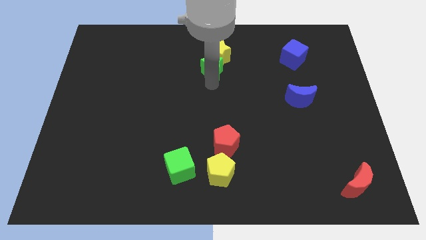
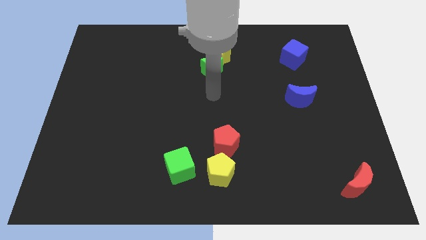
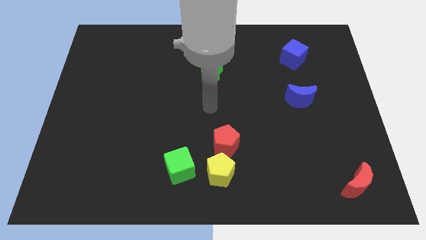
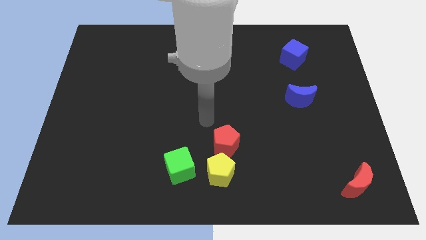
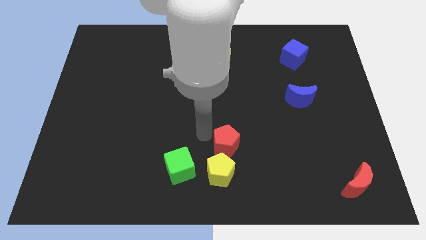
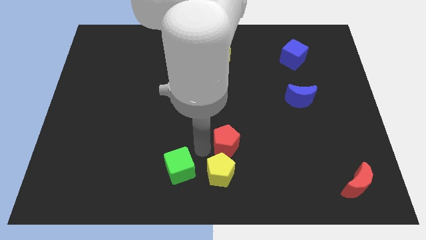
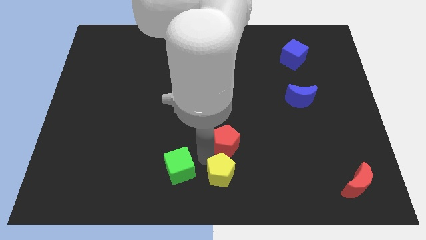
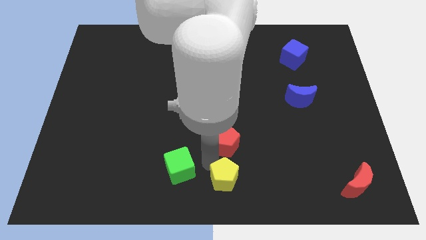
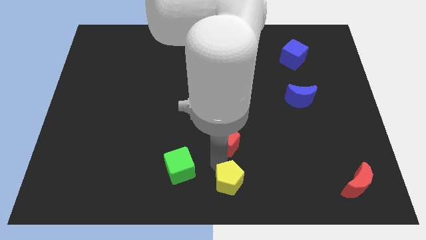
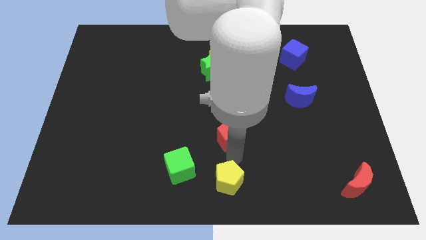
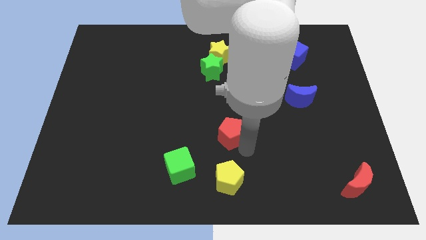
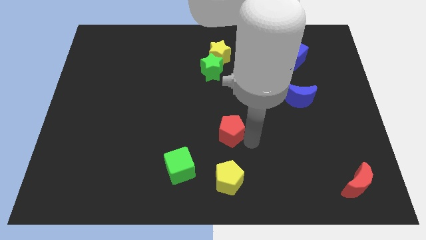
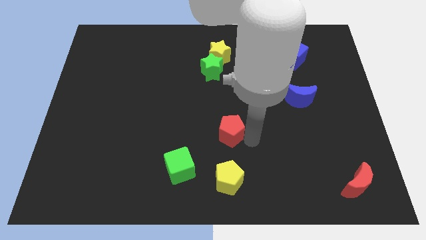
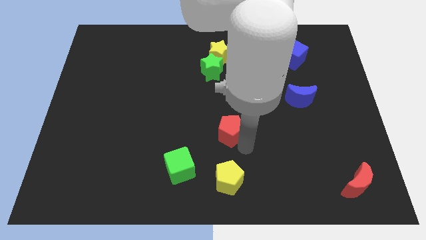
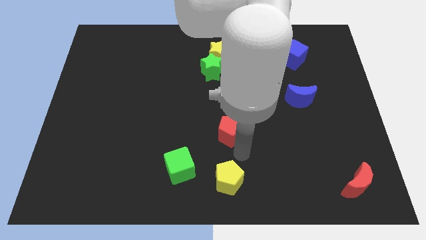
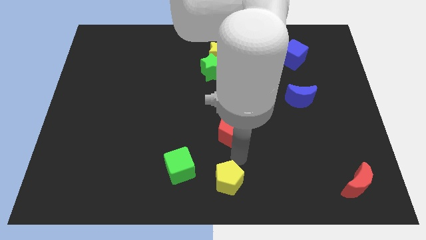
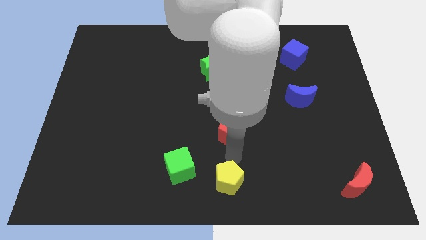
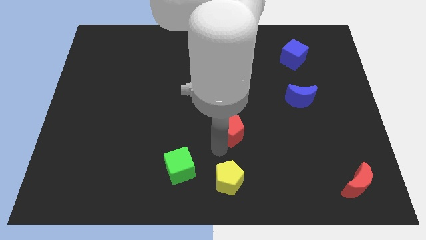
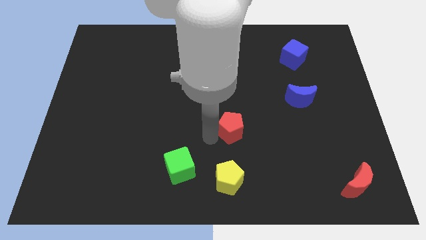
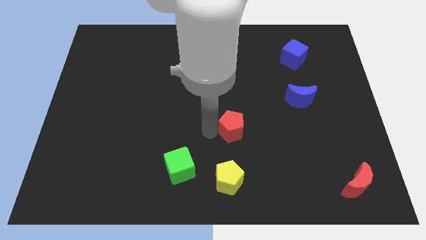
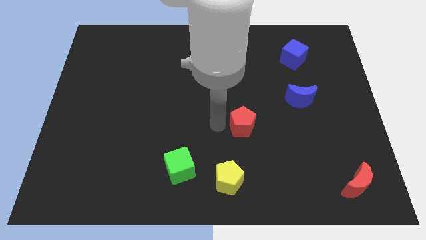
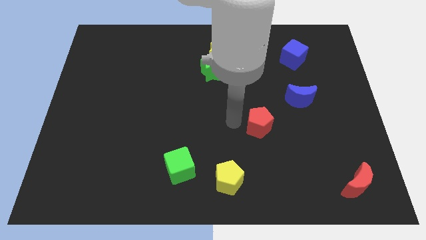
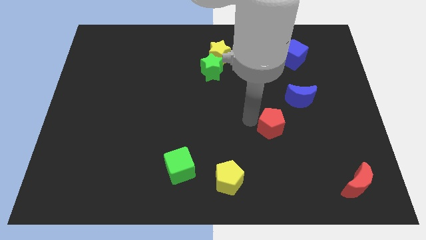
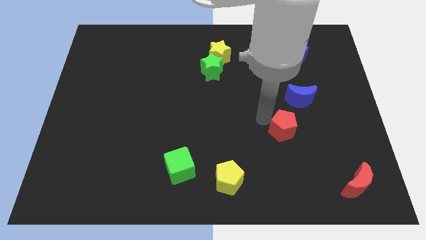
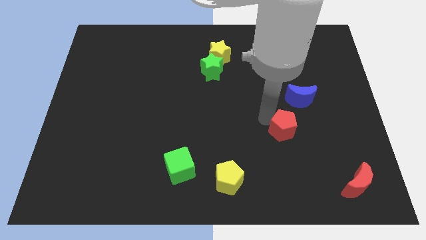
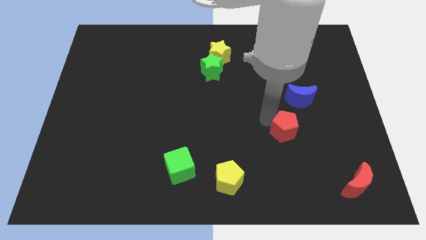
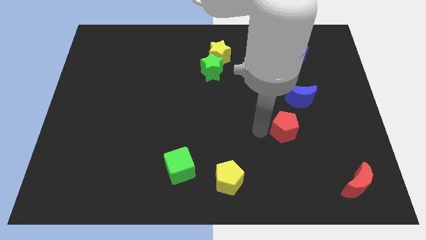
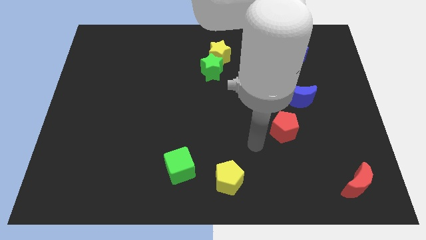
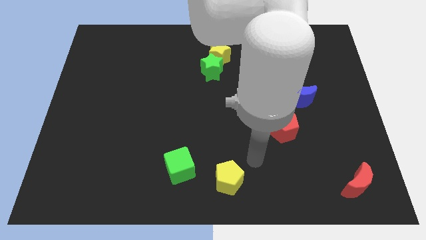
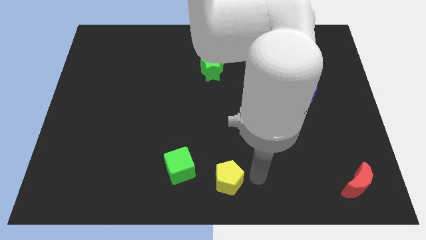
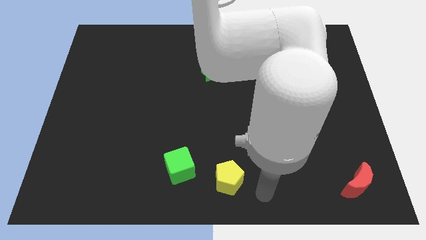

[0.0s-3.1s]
move the red pentagon right side of the board

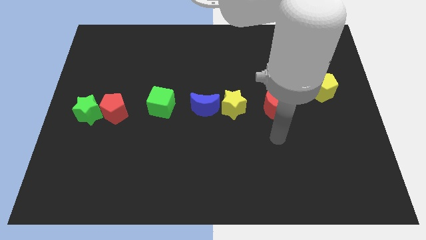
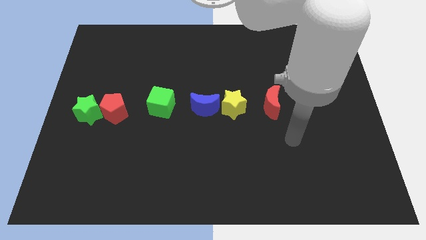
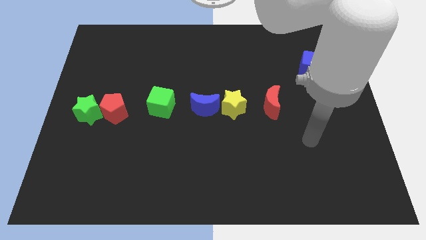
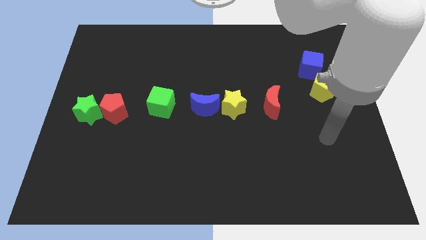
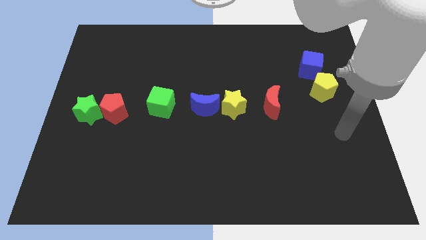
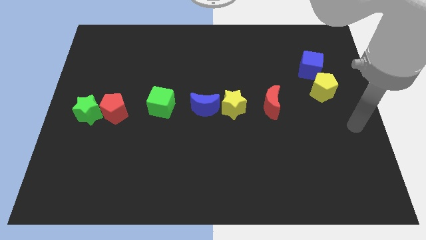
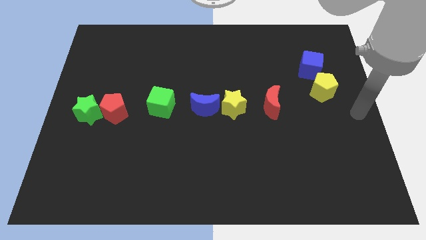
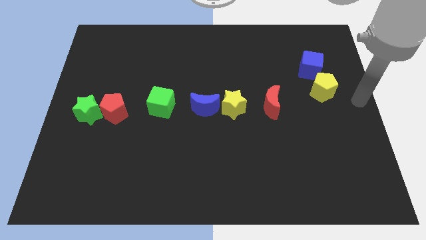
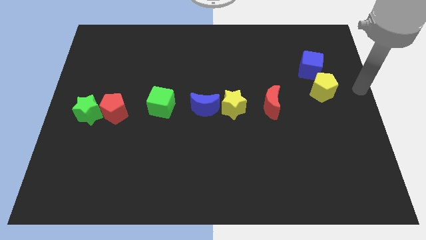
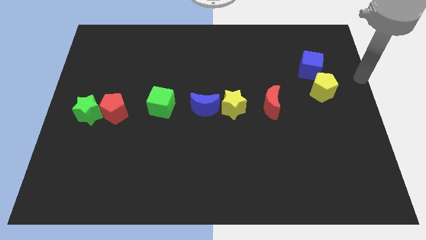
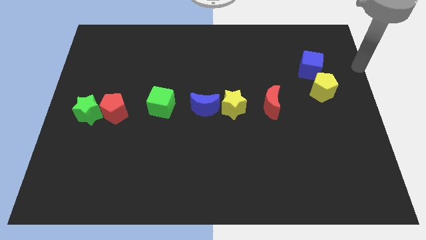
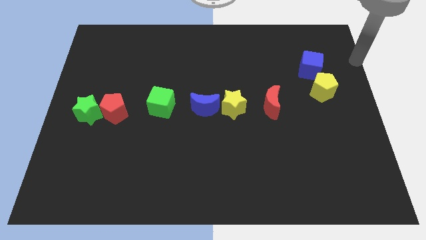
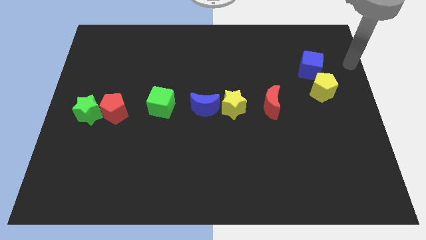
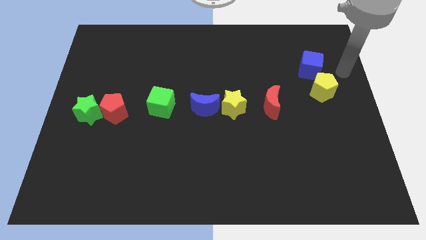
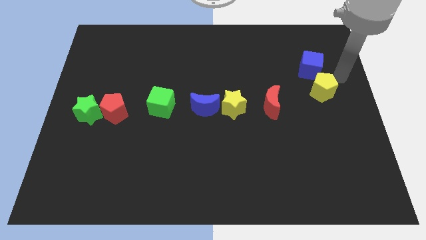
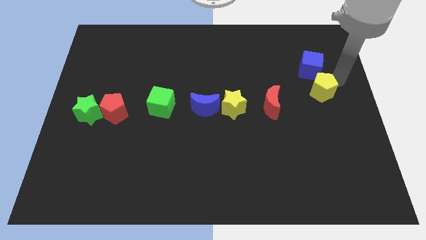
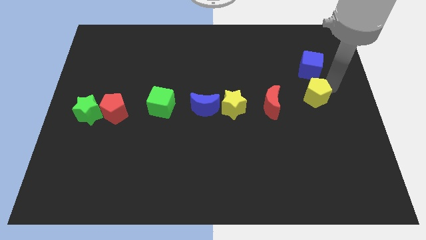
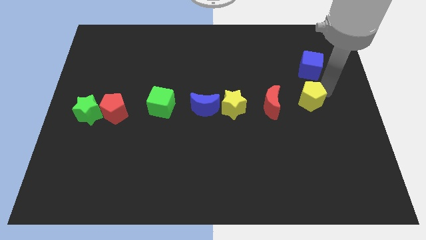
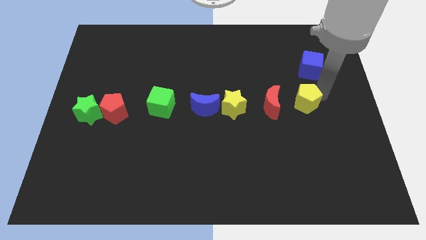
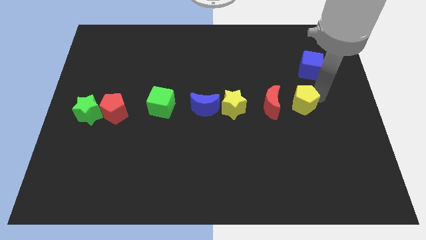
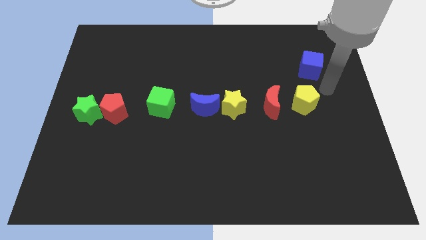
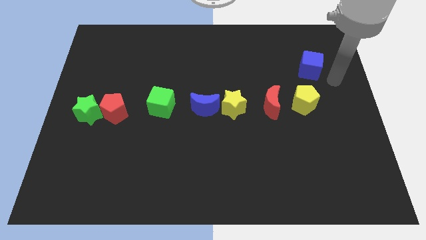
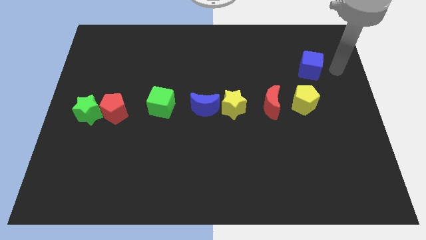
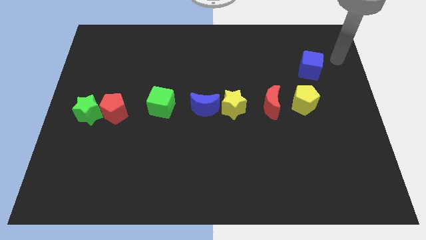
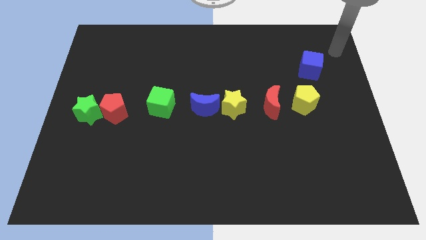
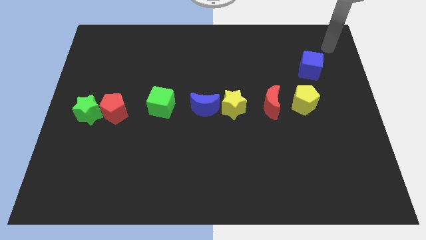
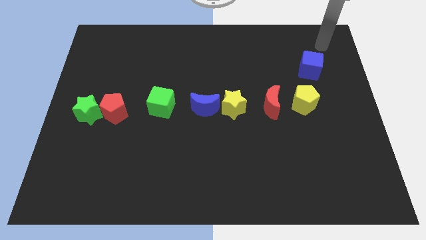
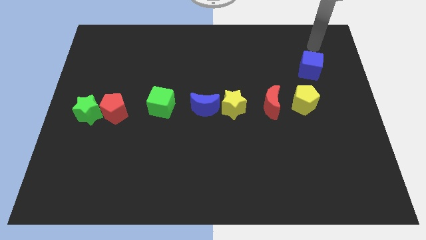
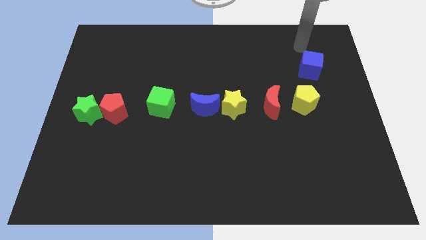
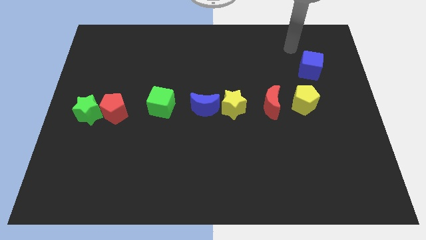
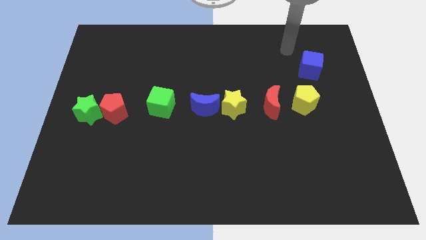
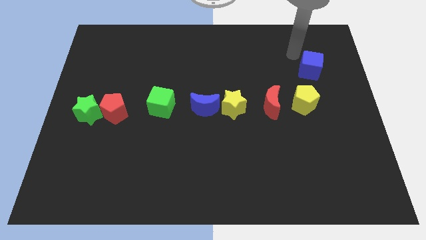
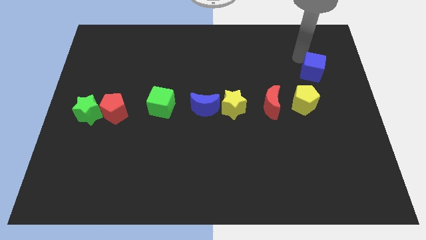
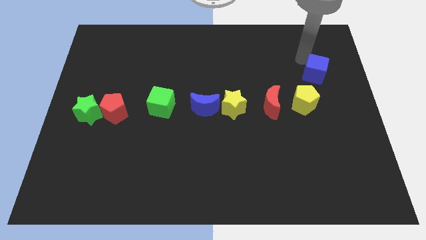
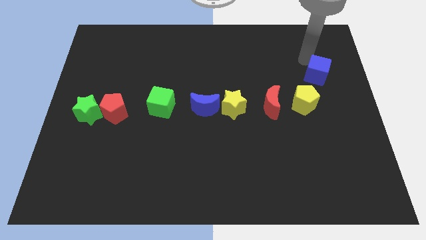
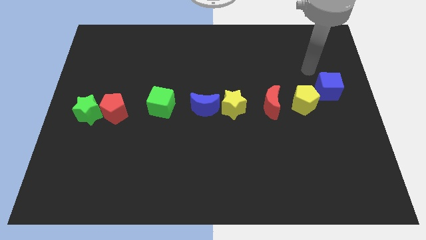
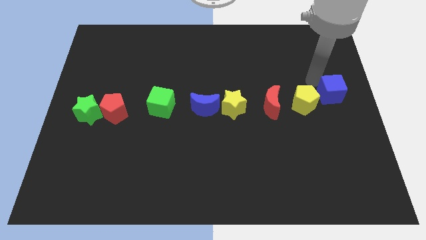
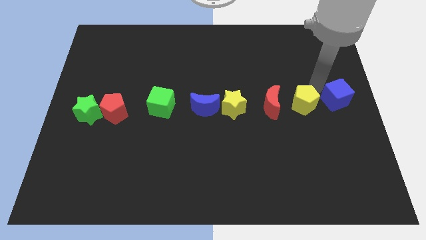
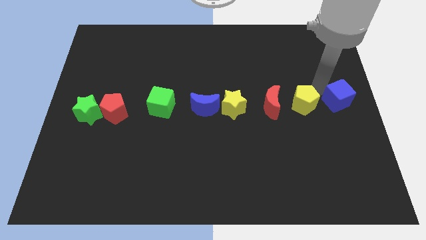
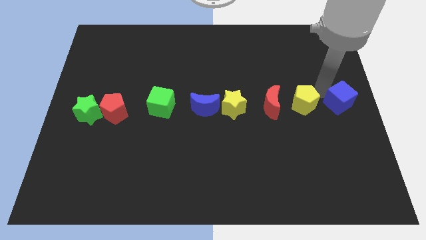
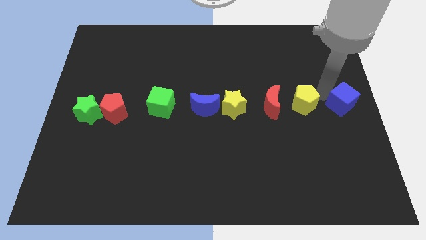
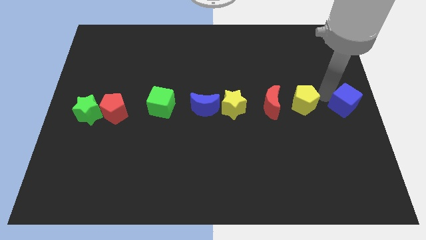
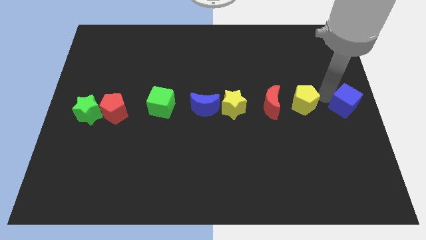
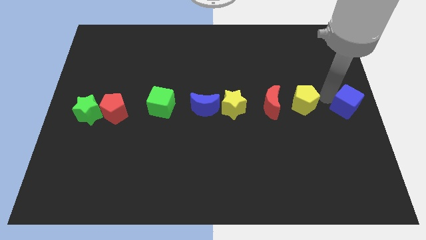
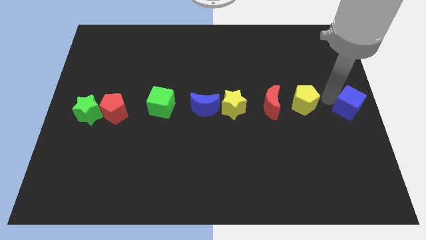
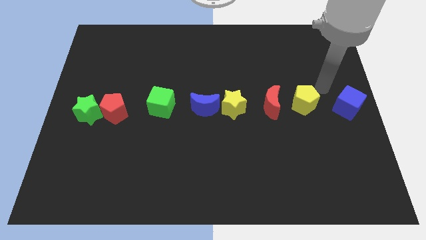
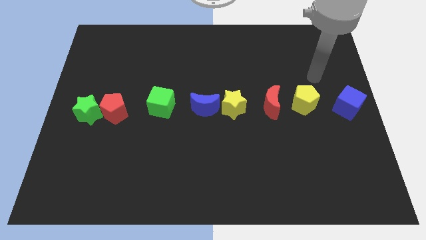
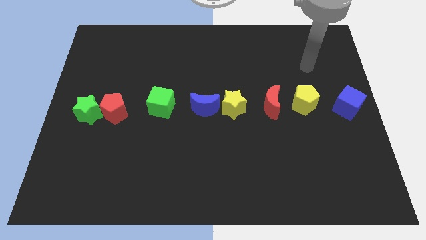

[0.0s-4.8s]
place yellow pentagon blue cube with the group of blocks to the right center of the board

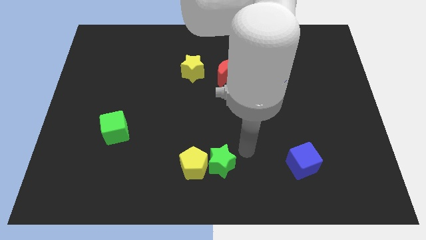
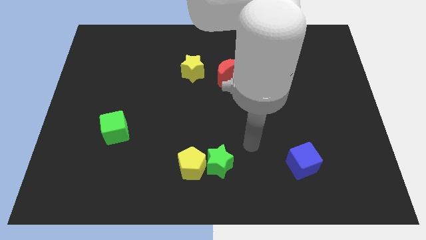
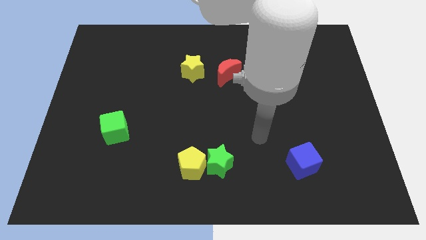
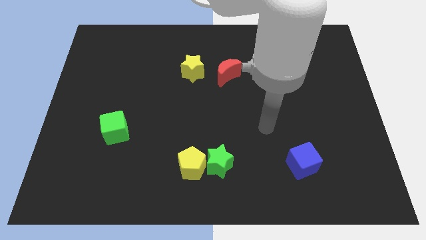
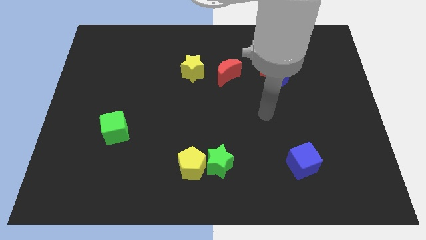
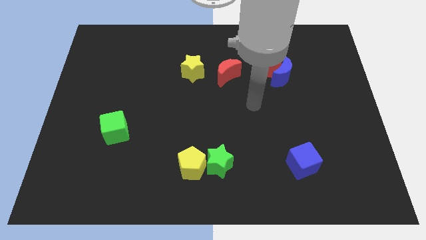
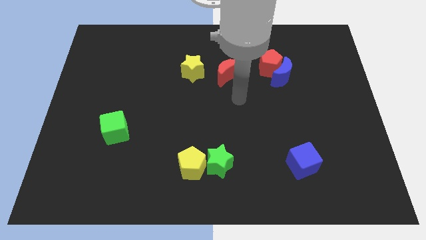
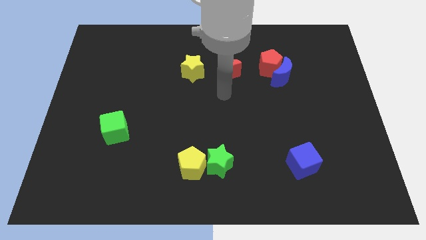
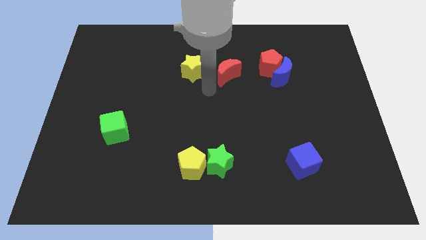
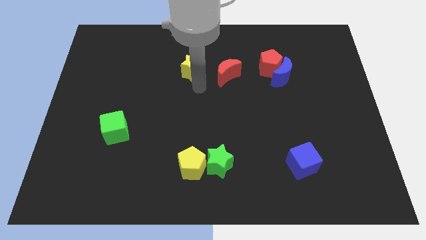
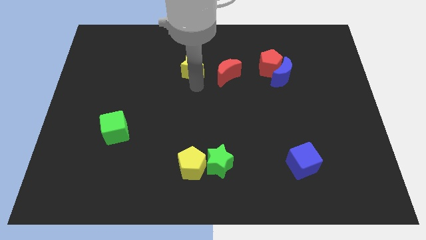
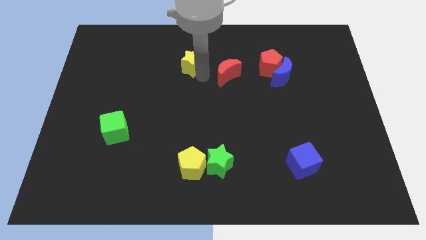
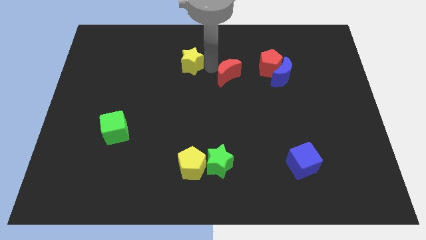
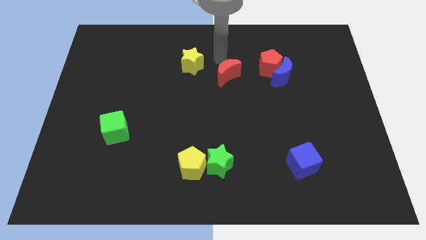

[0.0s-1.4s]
move the yellow star slightly to the top side of the board
